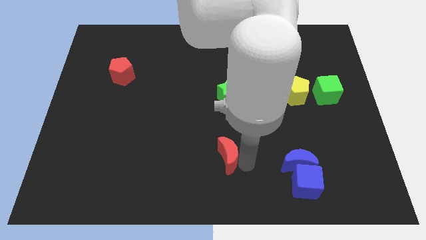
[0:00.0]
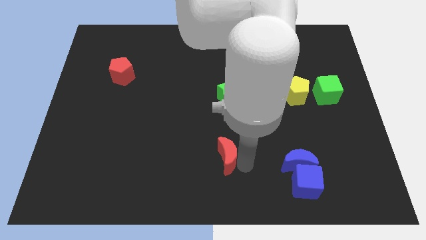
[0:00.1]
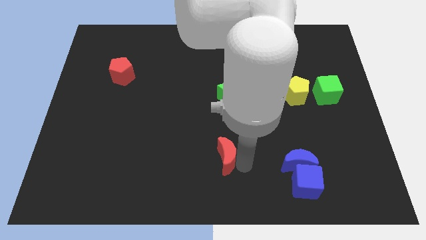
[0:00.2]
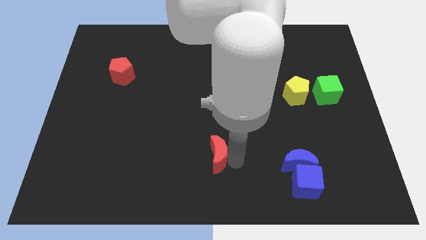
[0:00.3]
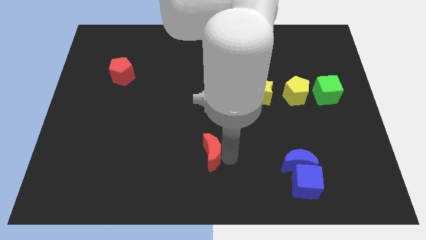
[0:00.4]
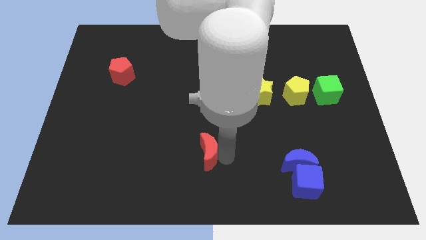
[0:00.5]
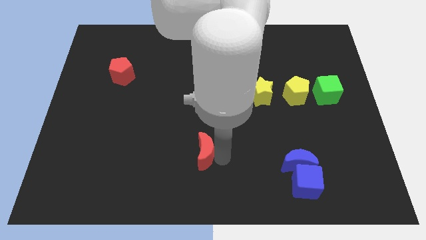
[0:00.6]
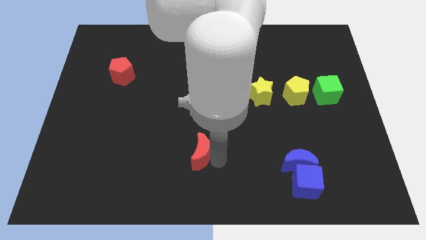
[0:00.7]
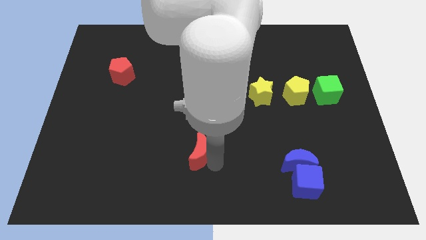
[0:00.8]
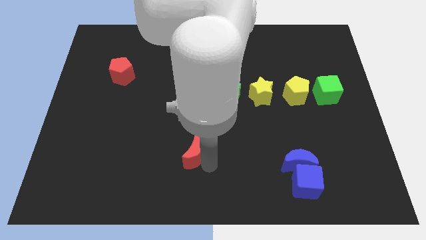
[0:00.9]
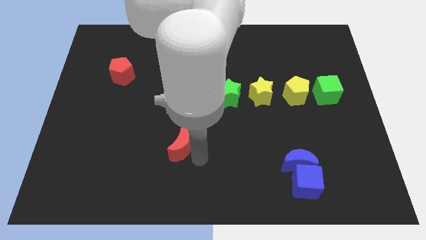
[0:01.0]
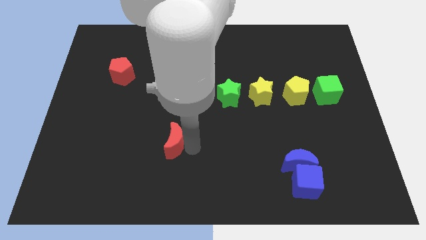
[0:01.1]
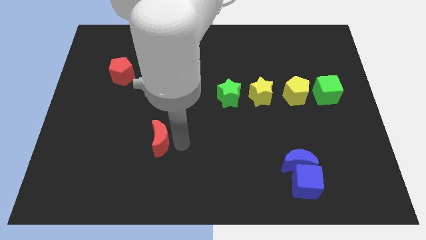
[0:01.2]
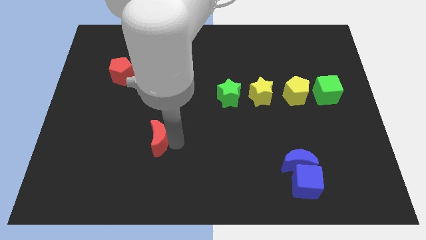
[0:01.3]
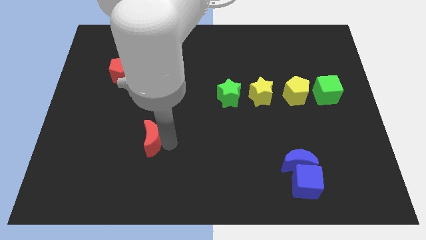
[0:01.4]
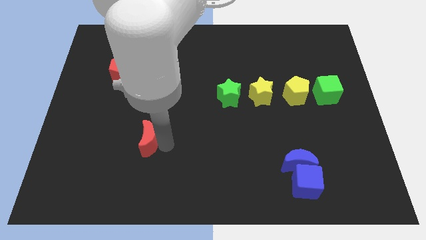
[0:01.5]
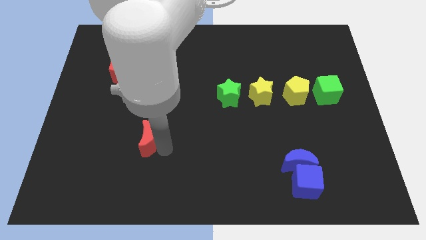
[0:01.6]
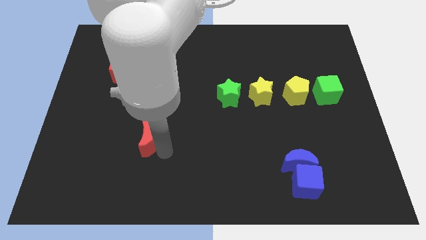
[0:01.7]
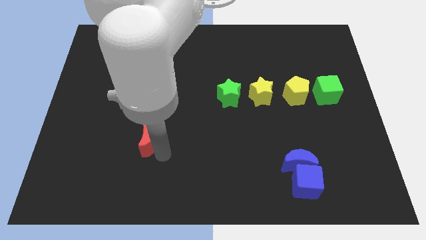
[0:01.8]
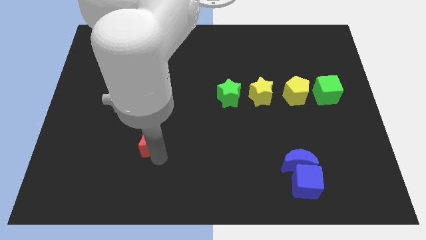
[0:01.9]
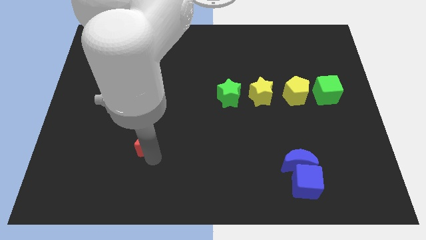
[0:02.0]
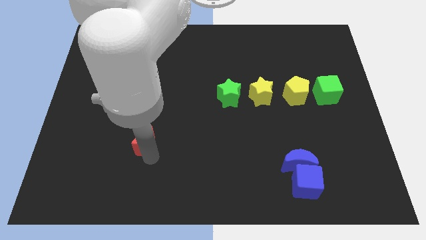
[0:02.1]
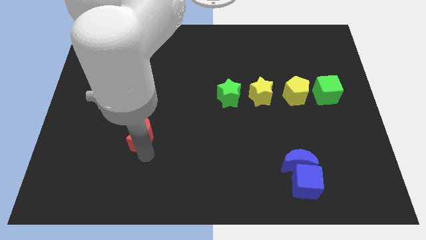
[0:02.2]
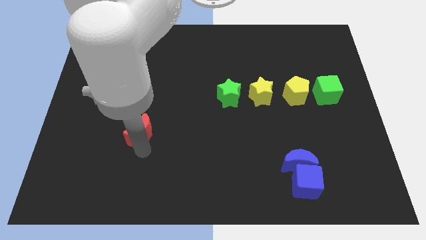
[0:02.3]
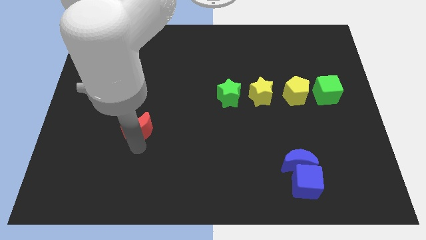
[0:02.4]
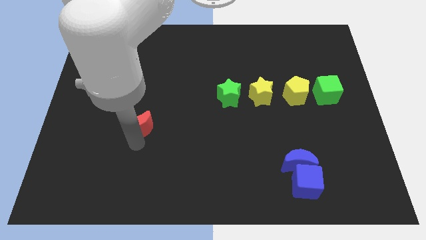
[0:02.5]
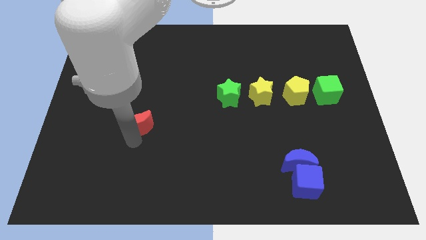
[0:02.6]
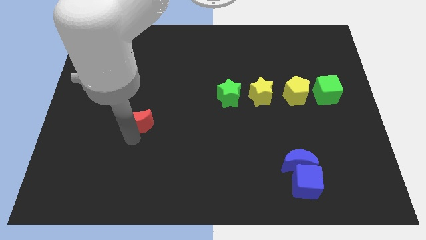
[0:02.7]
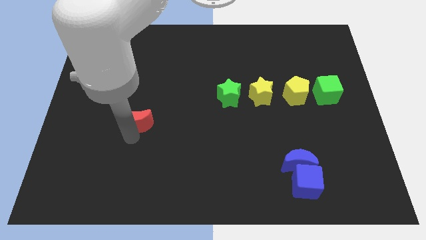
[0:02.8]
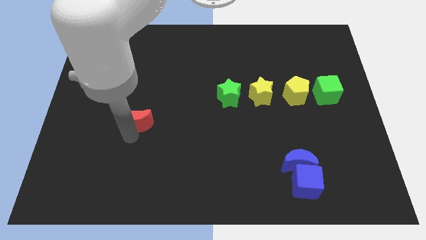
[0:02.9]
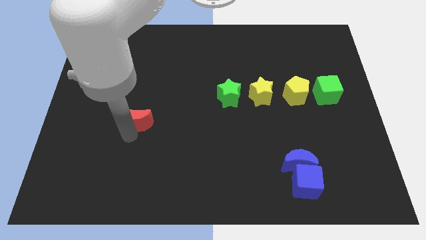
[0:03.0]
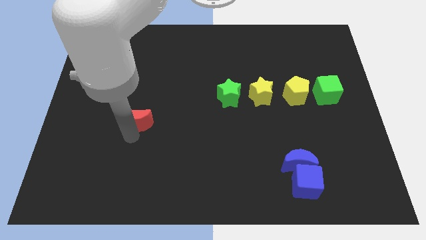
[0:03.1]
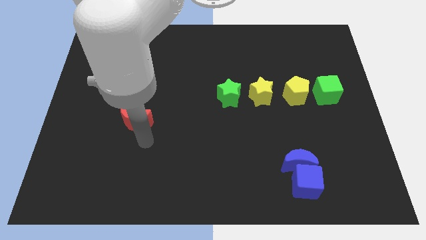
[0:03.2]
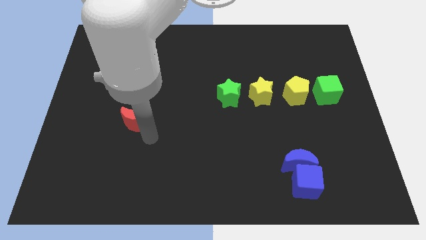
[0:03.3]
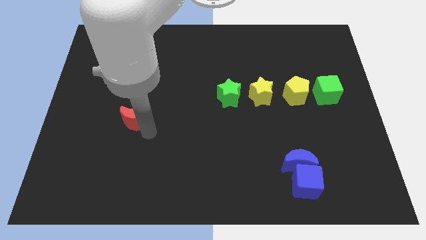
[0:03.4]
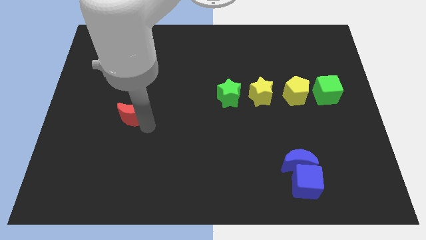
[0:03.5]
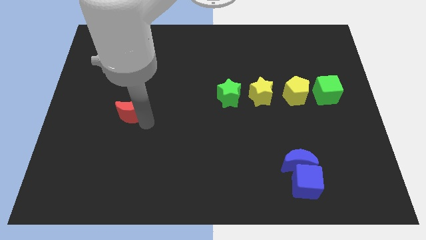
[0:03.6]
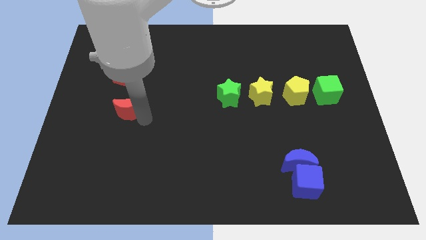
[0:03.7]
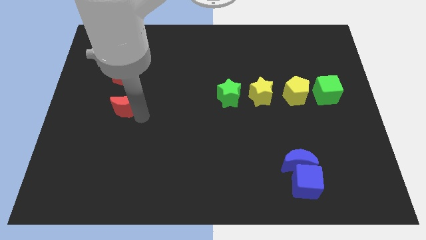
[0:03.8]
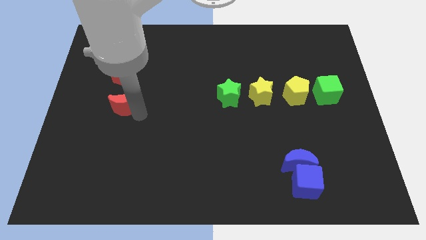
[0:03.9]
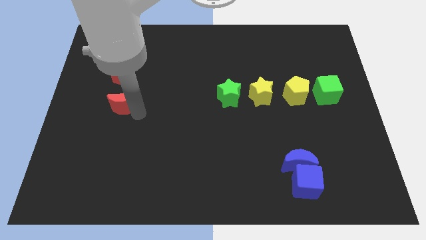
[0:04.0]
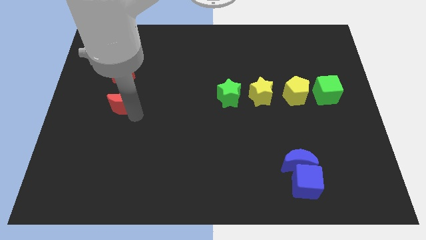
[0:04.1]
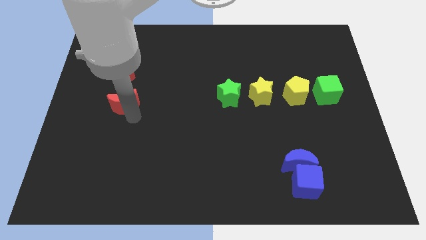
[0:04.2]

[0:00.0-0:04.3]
move the red moon in a diagonal way to the middle left side of the board

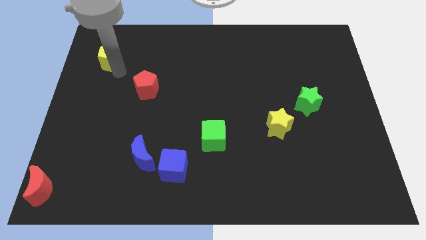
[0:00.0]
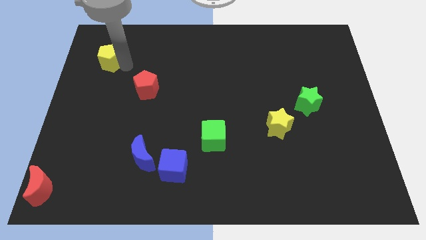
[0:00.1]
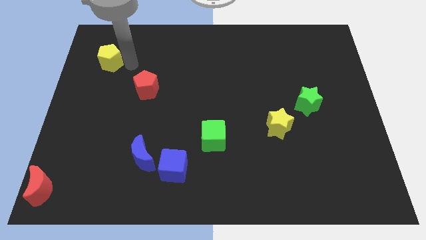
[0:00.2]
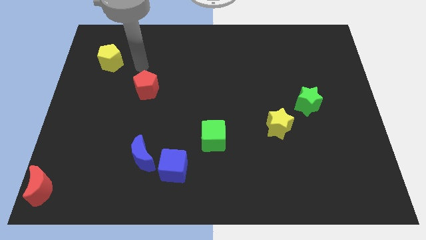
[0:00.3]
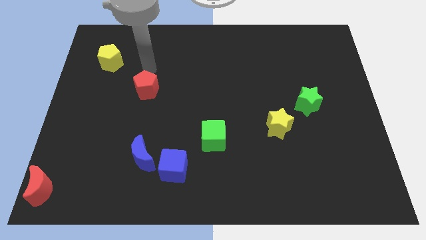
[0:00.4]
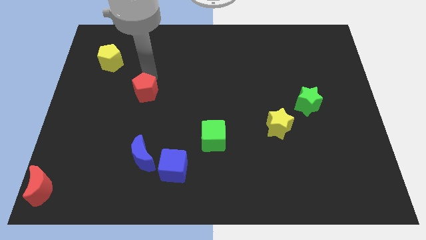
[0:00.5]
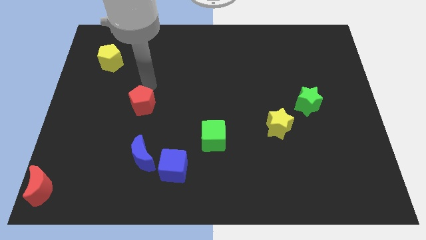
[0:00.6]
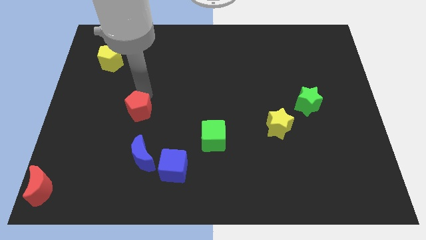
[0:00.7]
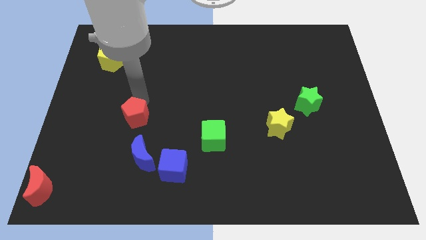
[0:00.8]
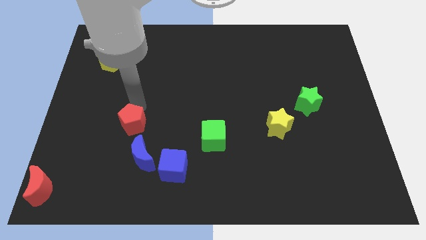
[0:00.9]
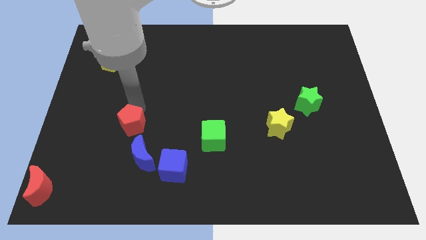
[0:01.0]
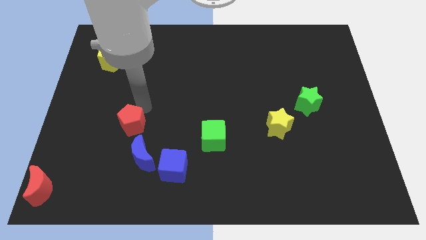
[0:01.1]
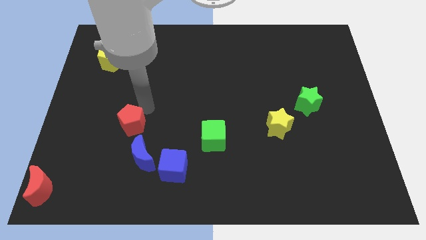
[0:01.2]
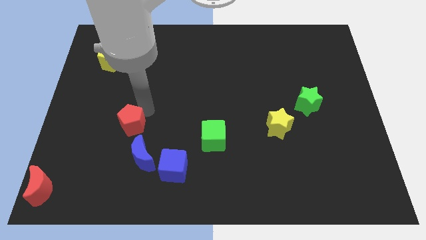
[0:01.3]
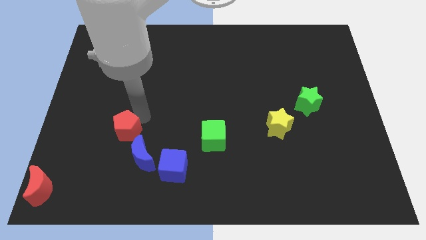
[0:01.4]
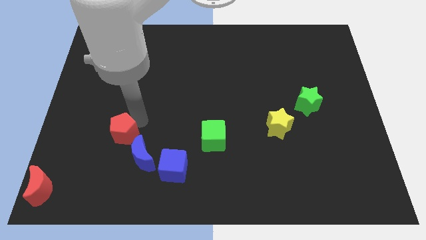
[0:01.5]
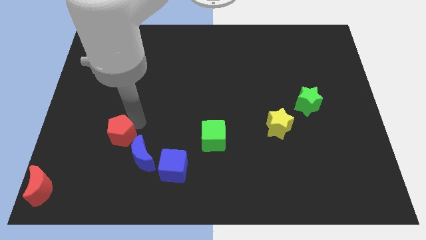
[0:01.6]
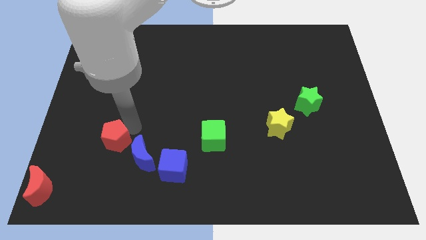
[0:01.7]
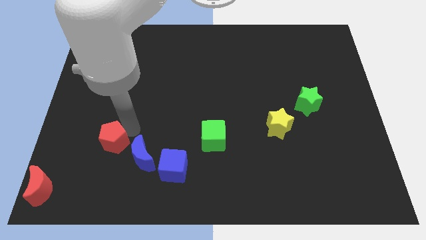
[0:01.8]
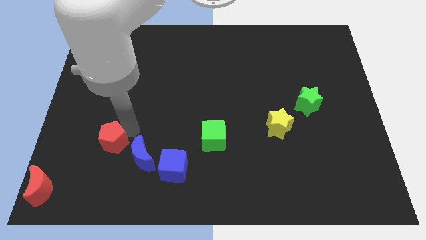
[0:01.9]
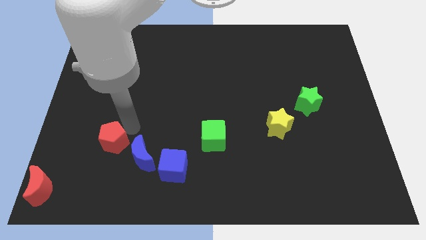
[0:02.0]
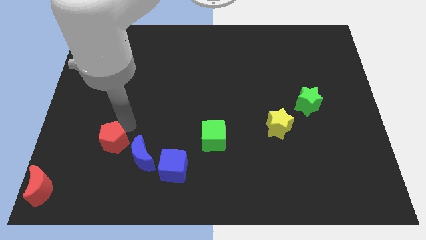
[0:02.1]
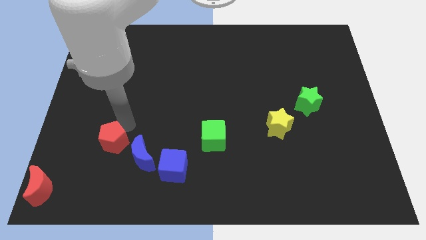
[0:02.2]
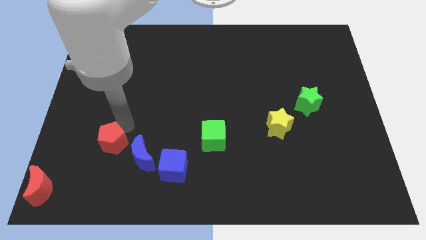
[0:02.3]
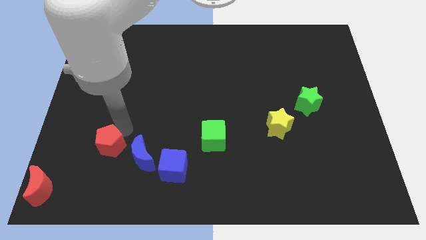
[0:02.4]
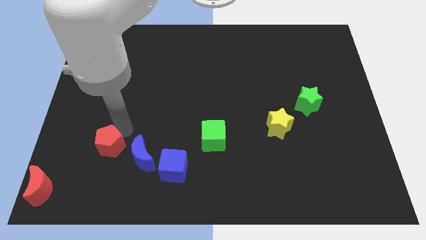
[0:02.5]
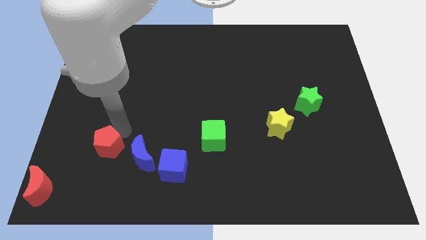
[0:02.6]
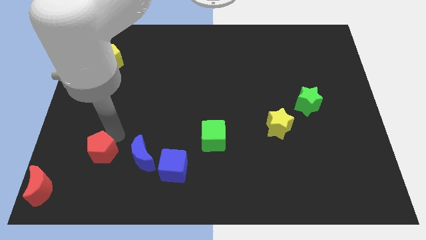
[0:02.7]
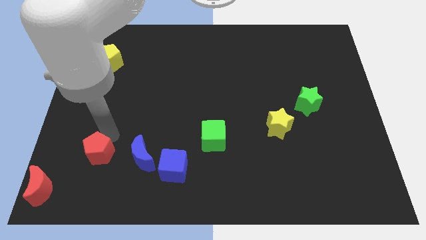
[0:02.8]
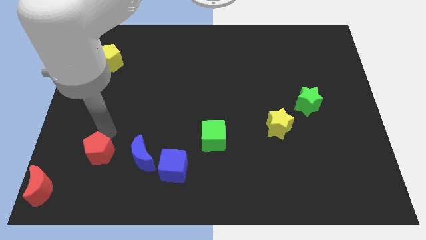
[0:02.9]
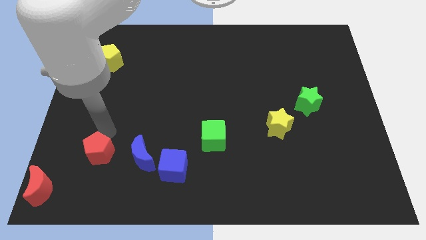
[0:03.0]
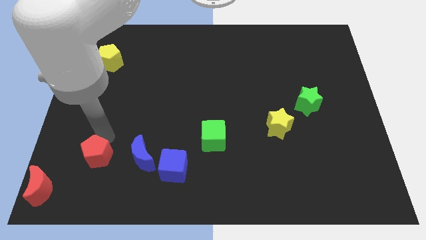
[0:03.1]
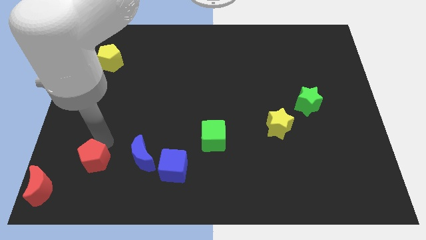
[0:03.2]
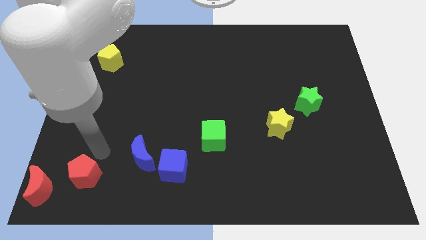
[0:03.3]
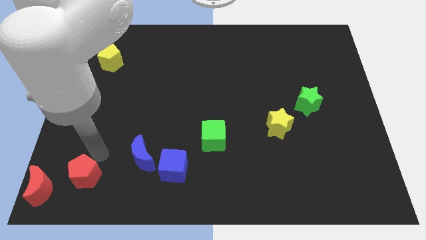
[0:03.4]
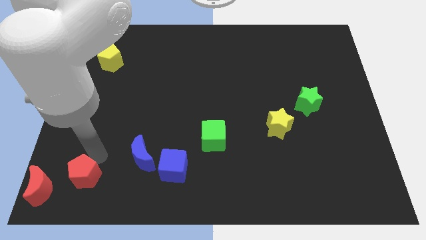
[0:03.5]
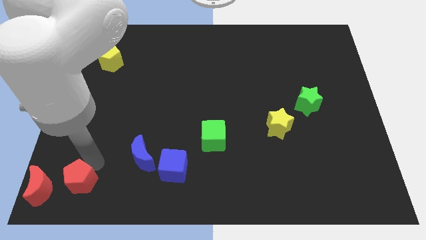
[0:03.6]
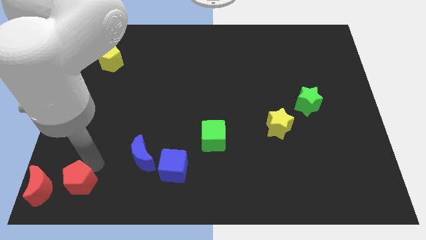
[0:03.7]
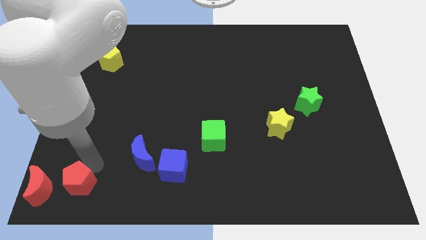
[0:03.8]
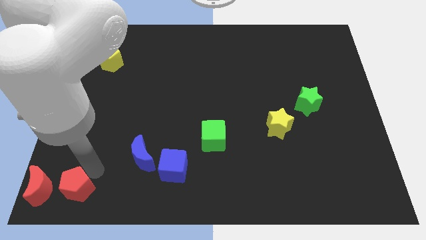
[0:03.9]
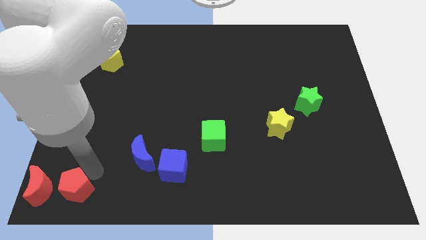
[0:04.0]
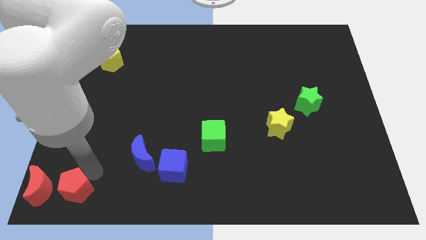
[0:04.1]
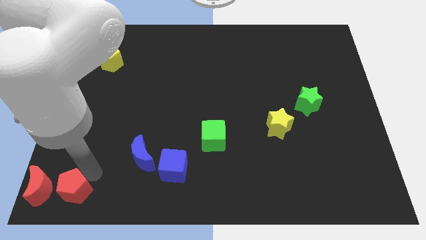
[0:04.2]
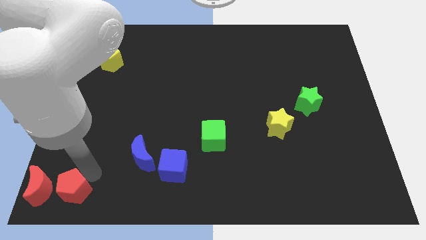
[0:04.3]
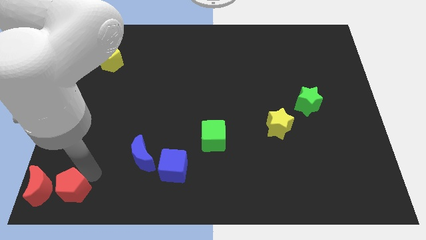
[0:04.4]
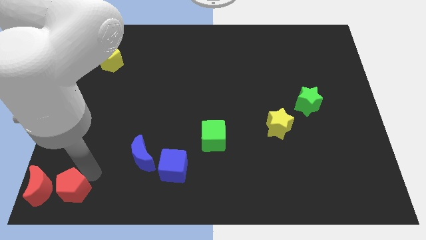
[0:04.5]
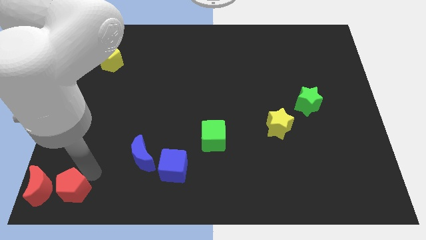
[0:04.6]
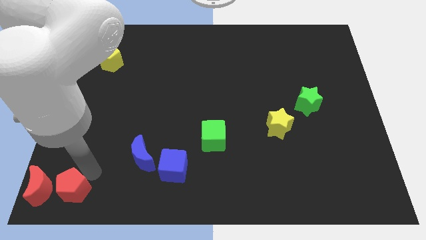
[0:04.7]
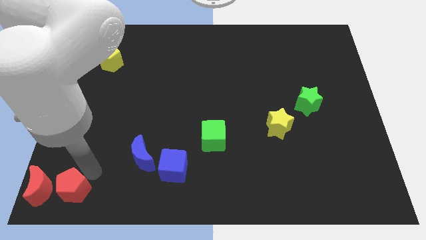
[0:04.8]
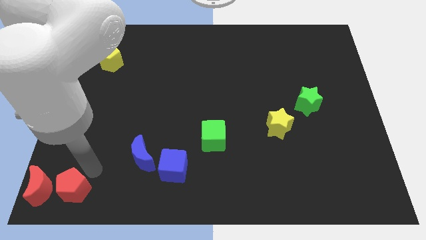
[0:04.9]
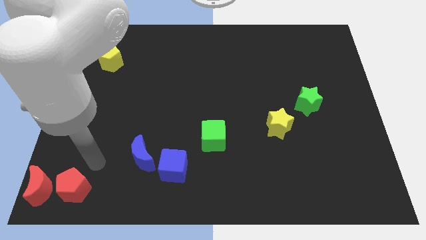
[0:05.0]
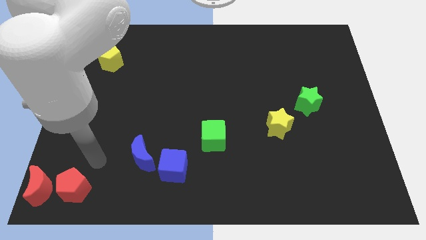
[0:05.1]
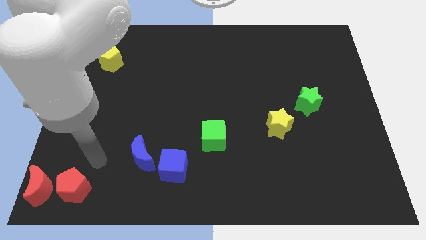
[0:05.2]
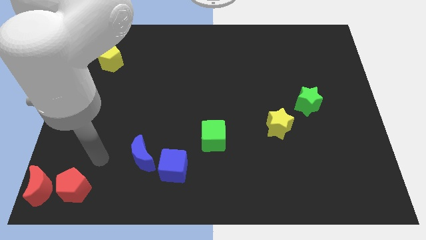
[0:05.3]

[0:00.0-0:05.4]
place the red pentagon to the right side of the red crecent
